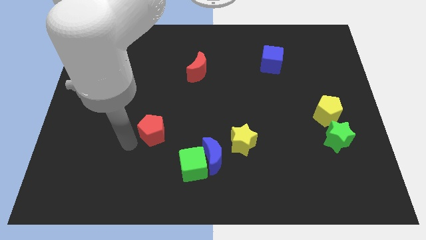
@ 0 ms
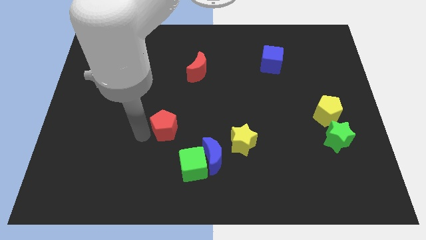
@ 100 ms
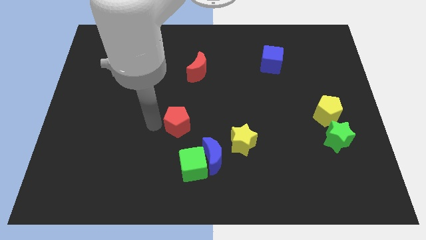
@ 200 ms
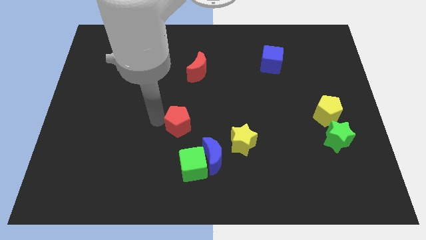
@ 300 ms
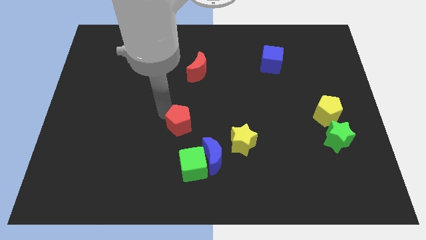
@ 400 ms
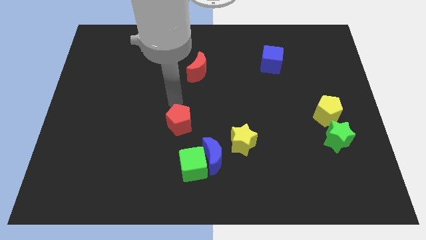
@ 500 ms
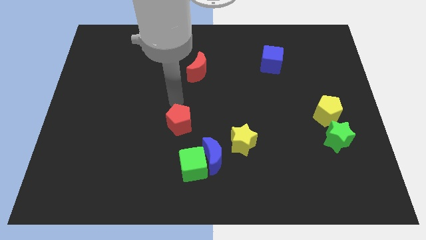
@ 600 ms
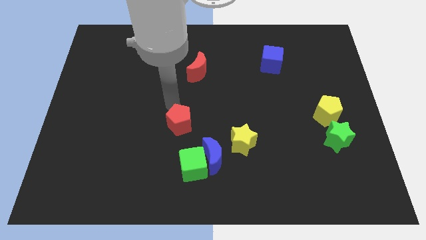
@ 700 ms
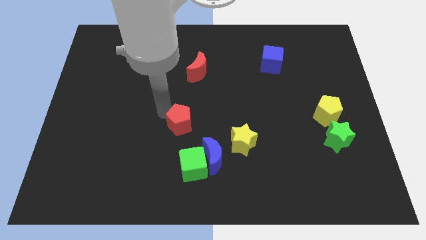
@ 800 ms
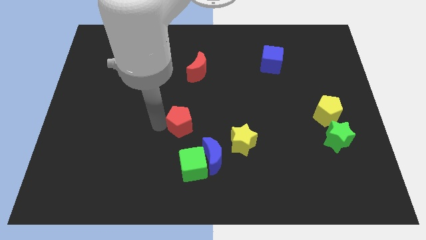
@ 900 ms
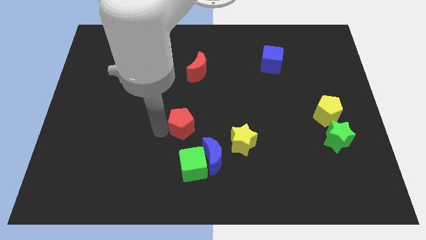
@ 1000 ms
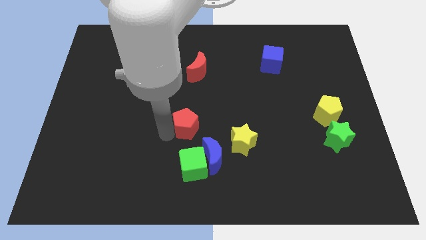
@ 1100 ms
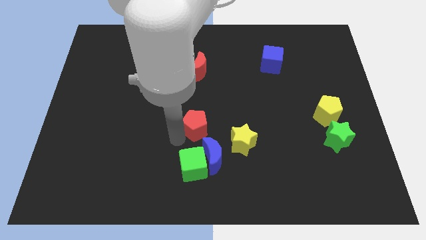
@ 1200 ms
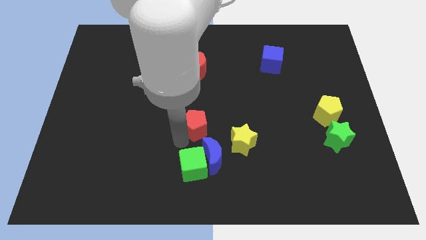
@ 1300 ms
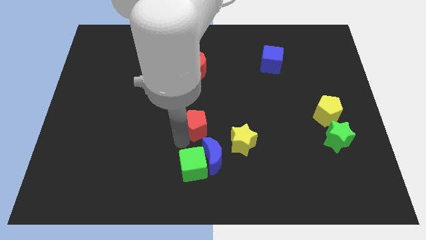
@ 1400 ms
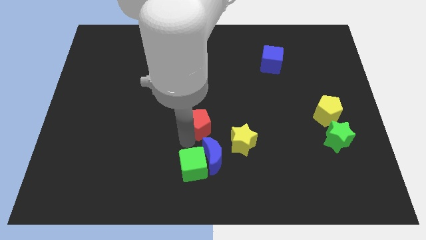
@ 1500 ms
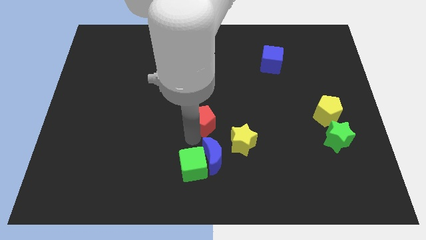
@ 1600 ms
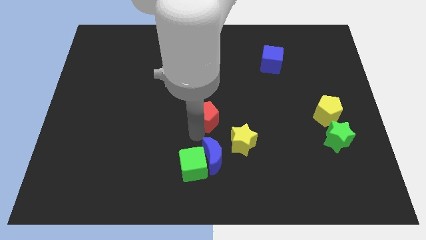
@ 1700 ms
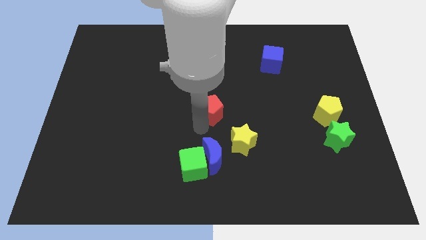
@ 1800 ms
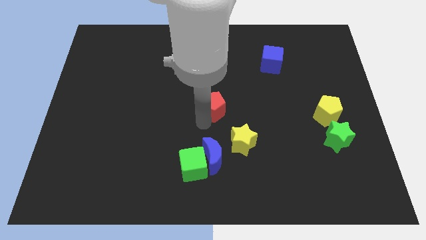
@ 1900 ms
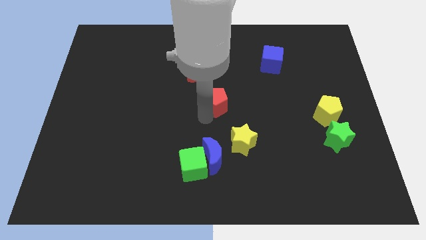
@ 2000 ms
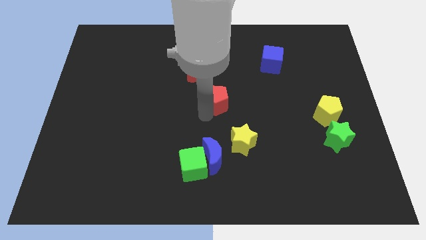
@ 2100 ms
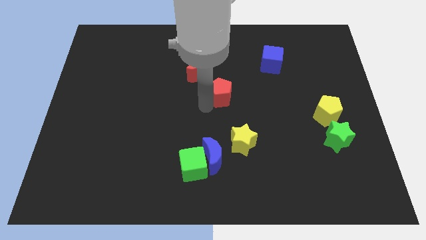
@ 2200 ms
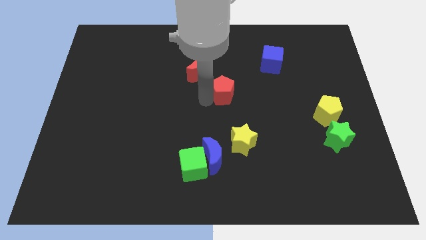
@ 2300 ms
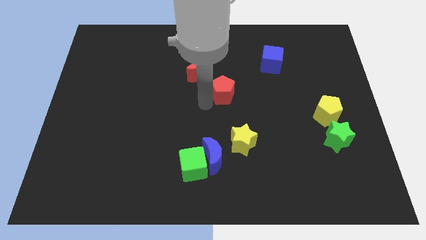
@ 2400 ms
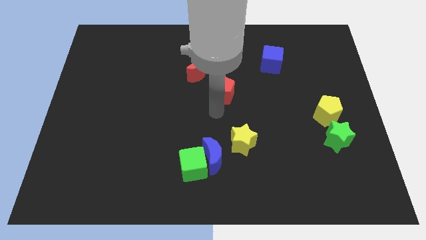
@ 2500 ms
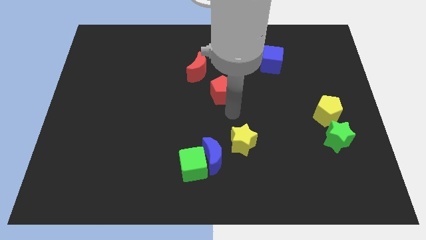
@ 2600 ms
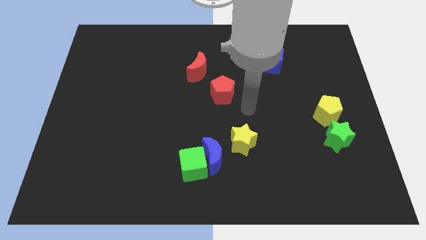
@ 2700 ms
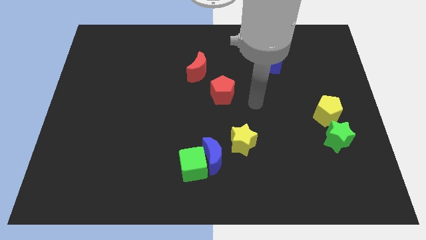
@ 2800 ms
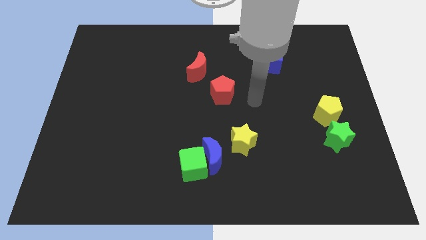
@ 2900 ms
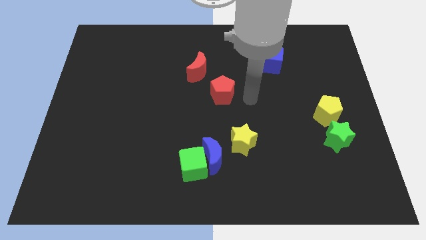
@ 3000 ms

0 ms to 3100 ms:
push the green cube diagonally top left to the yellow star

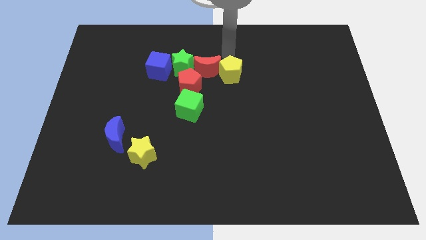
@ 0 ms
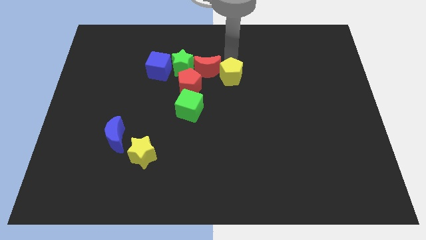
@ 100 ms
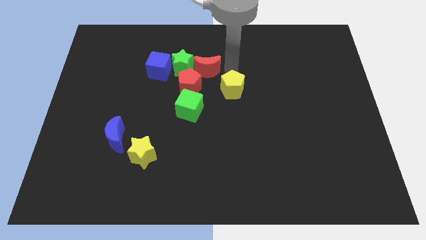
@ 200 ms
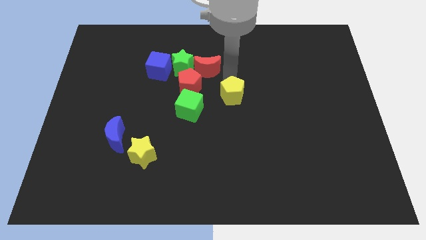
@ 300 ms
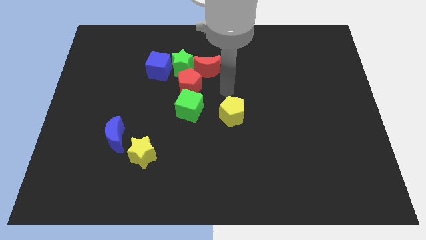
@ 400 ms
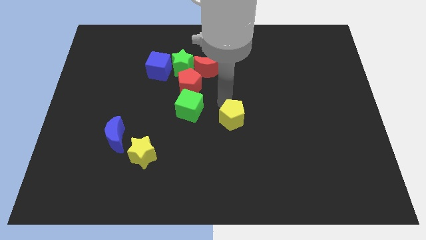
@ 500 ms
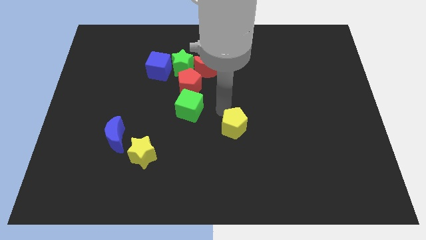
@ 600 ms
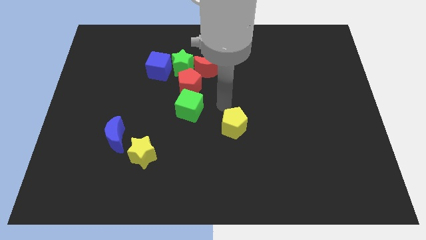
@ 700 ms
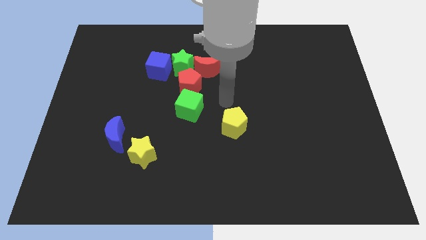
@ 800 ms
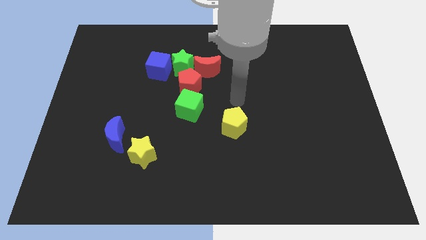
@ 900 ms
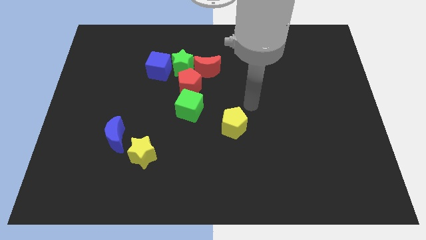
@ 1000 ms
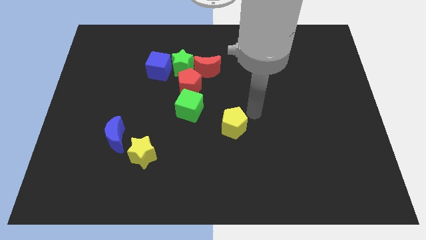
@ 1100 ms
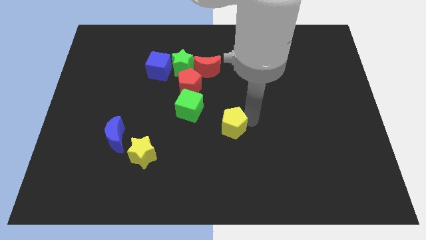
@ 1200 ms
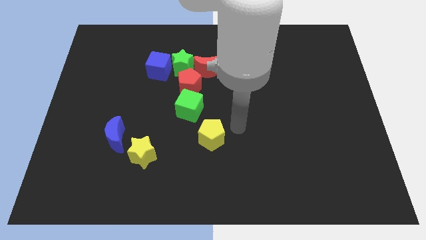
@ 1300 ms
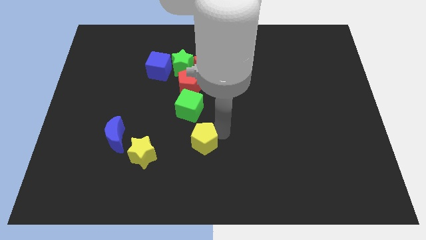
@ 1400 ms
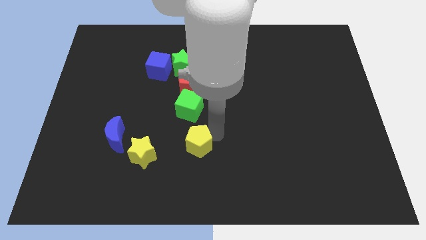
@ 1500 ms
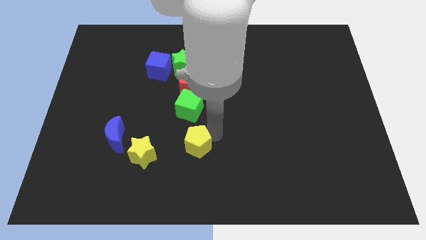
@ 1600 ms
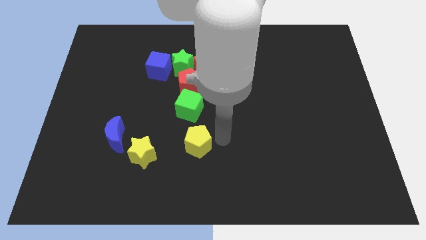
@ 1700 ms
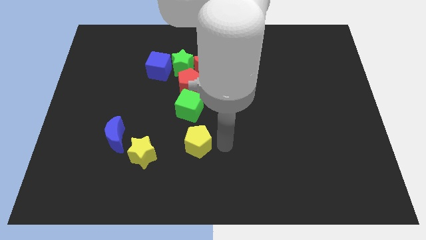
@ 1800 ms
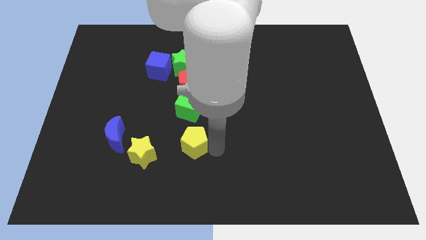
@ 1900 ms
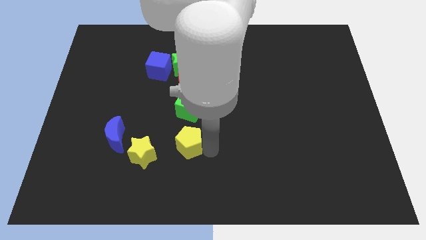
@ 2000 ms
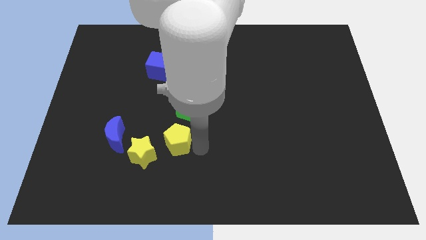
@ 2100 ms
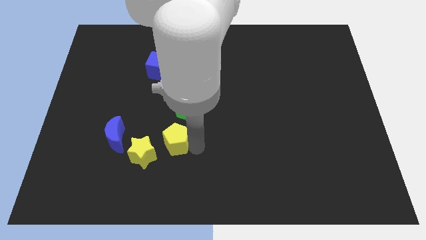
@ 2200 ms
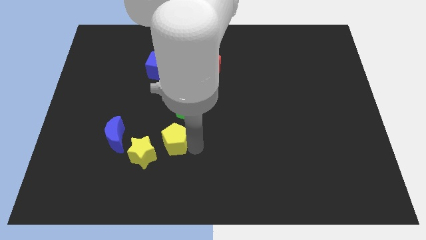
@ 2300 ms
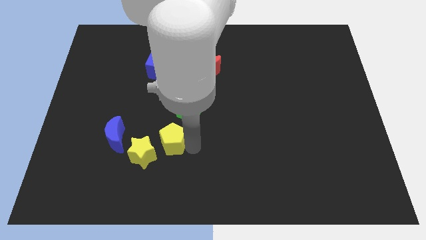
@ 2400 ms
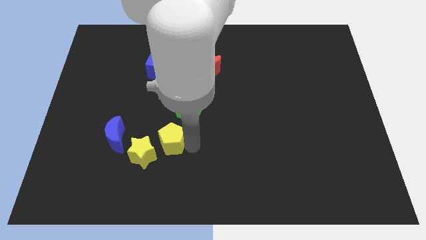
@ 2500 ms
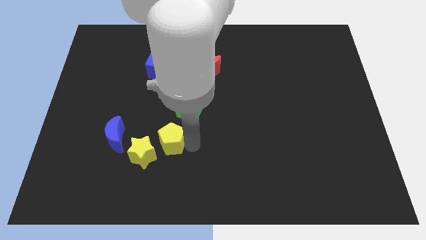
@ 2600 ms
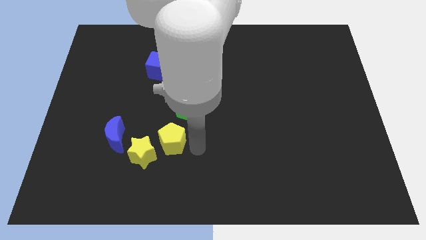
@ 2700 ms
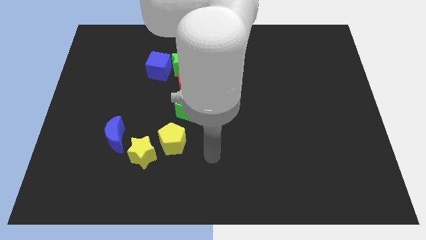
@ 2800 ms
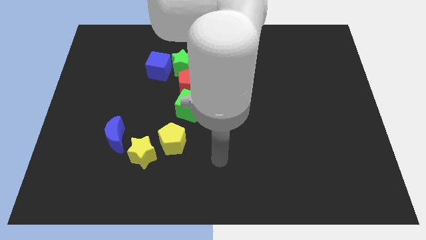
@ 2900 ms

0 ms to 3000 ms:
drag the yellow pentagon top right to yellow star

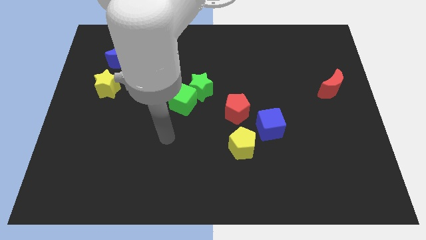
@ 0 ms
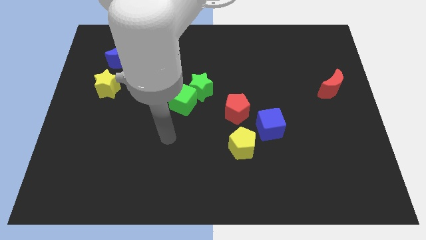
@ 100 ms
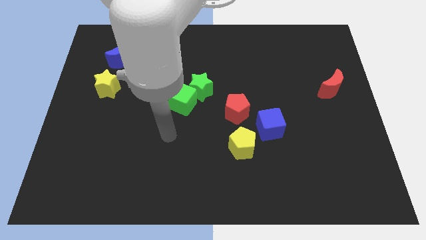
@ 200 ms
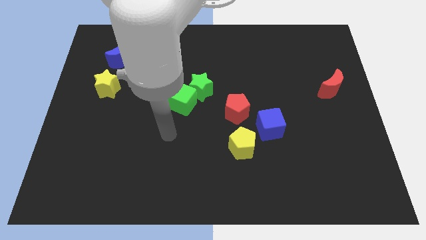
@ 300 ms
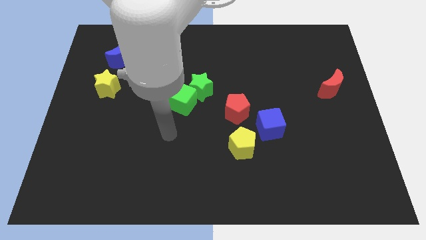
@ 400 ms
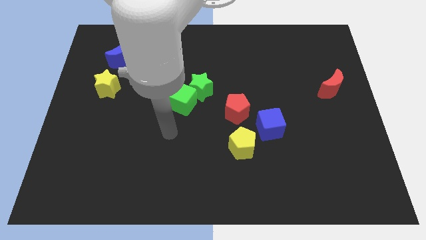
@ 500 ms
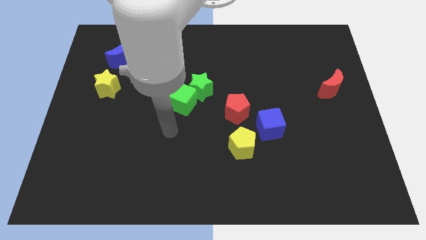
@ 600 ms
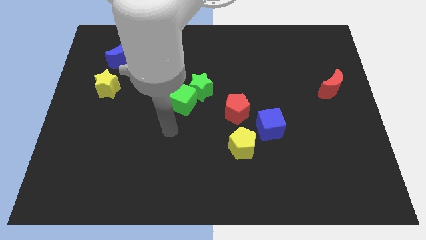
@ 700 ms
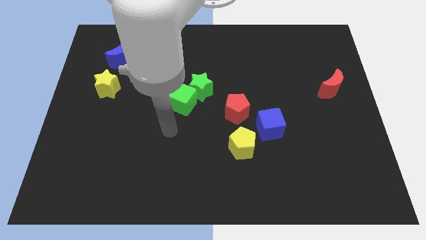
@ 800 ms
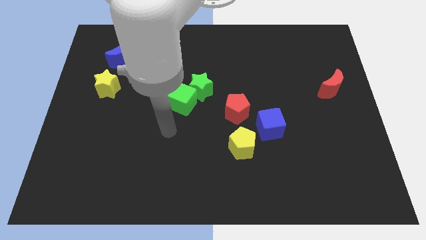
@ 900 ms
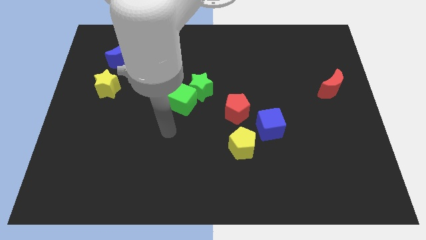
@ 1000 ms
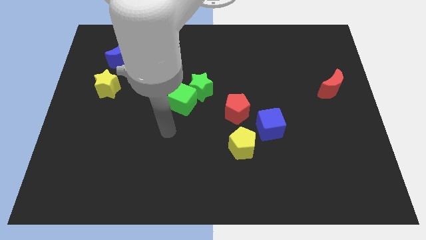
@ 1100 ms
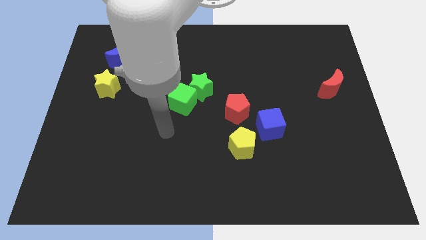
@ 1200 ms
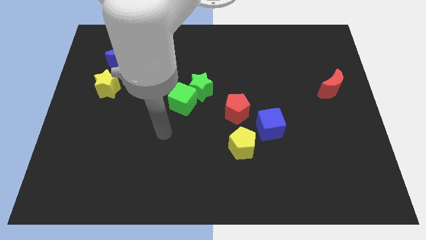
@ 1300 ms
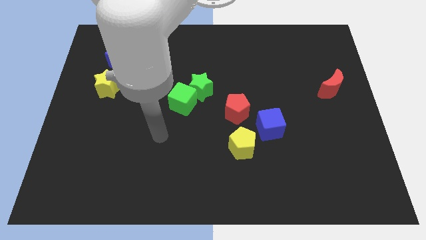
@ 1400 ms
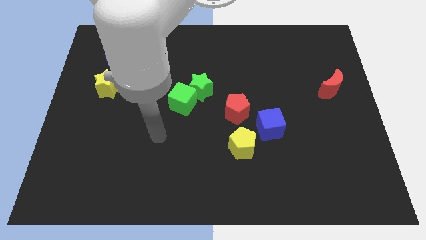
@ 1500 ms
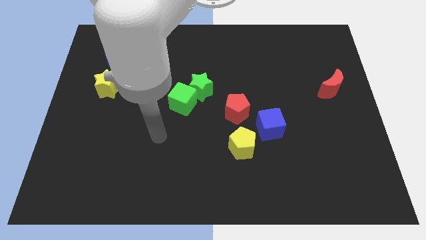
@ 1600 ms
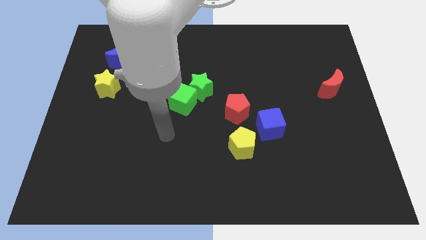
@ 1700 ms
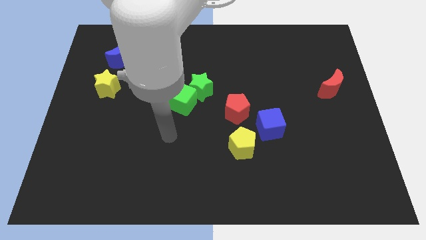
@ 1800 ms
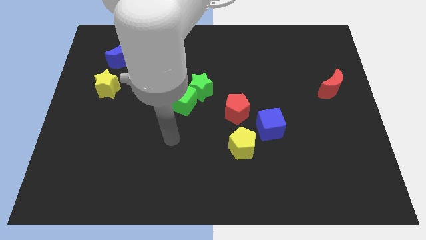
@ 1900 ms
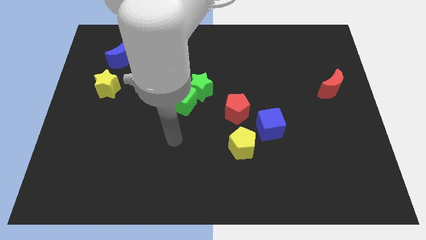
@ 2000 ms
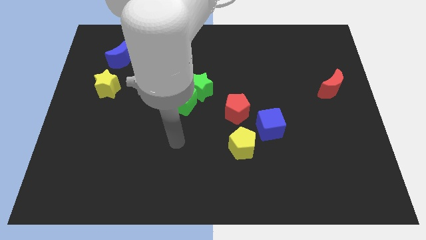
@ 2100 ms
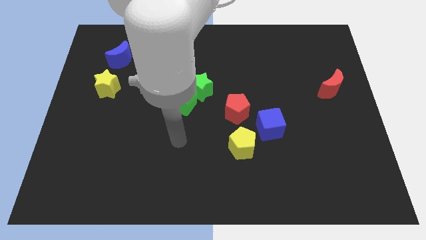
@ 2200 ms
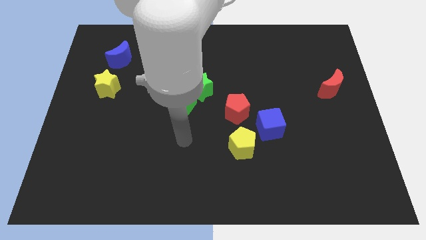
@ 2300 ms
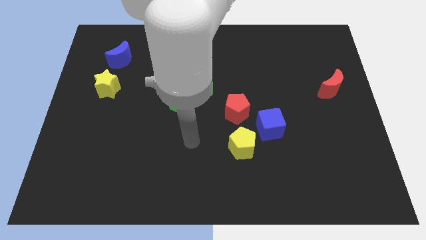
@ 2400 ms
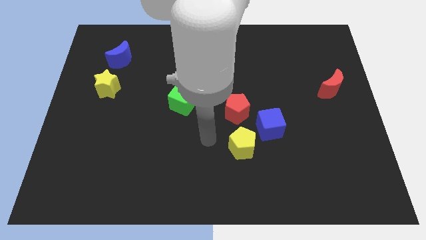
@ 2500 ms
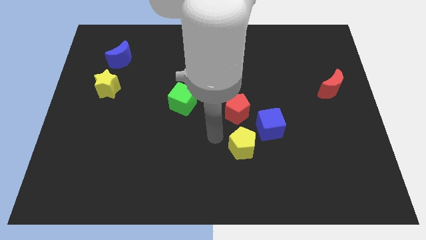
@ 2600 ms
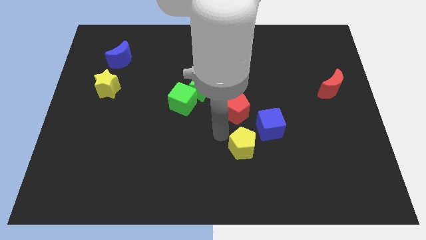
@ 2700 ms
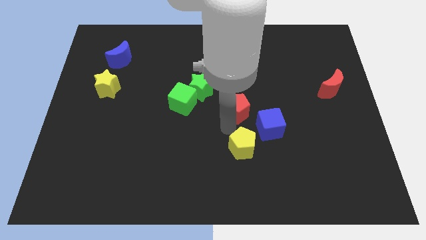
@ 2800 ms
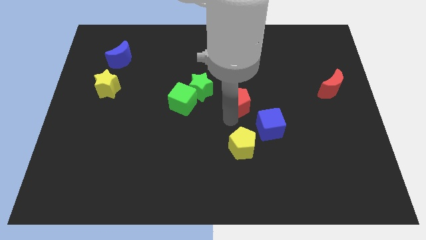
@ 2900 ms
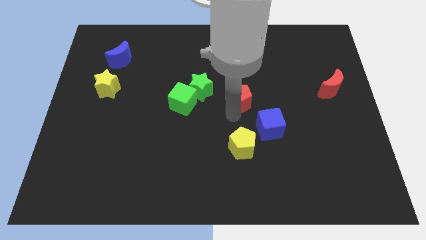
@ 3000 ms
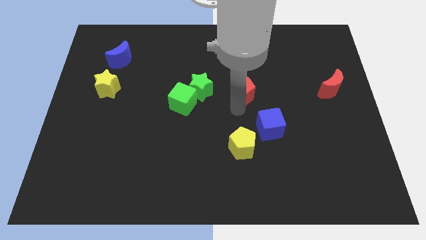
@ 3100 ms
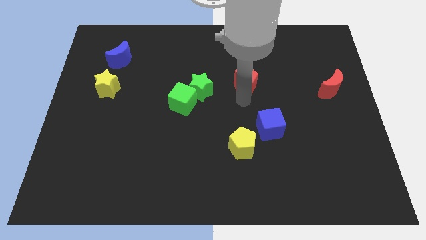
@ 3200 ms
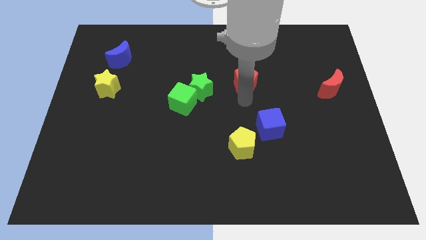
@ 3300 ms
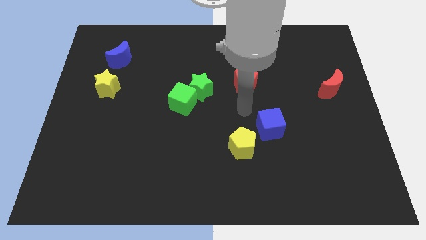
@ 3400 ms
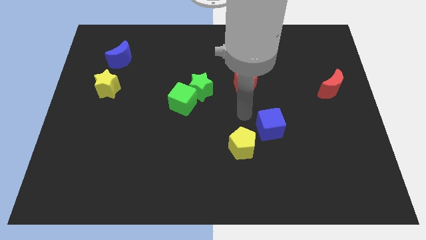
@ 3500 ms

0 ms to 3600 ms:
move the red pentagon to the top of the board
